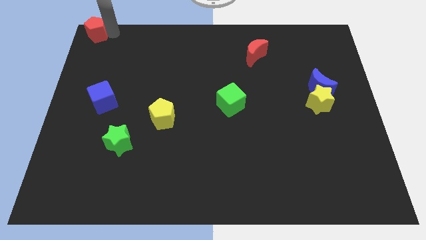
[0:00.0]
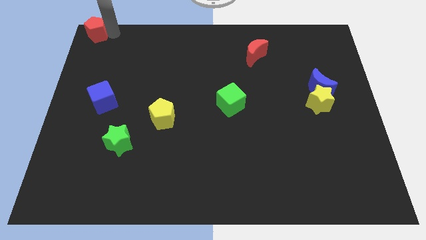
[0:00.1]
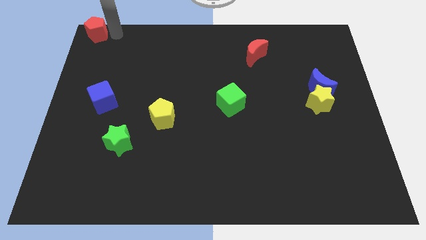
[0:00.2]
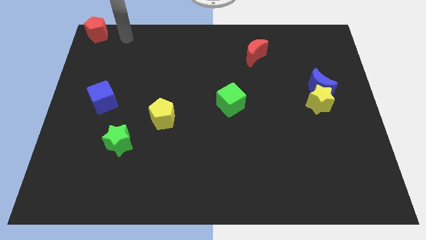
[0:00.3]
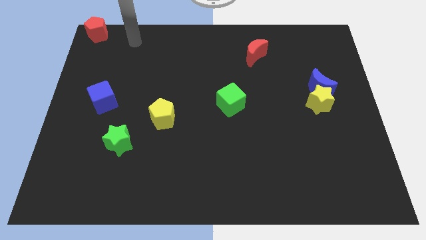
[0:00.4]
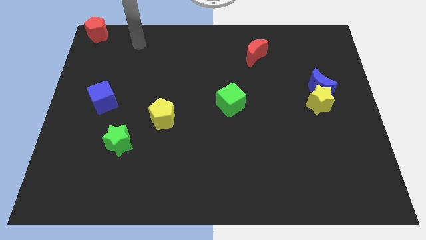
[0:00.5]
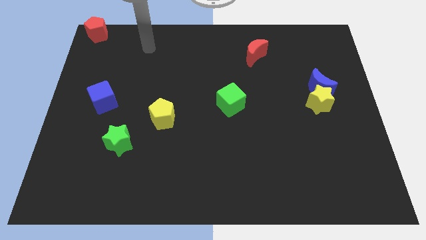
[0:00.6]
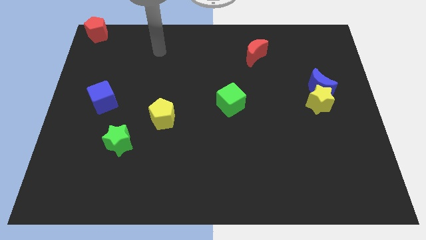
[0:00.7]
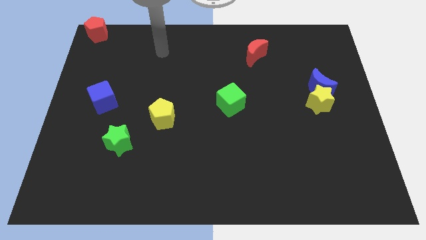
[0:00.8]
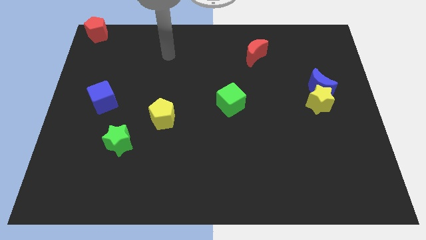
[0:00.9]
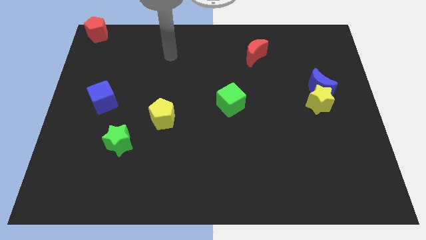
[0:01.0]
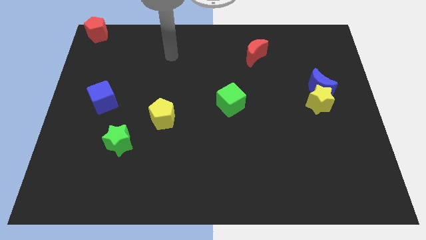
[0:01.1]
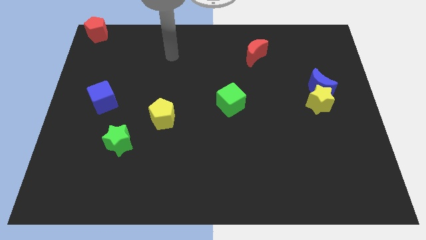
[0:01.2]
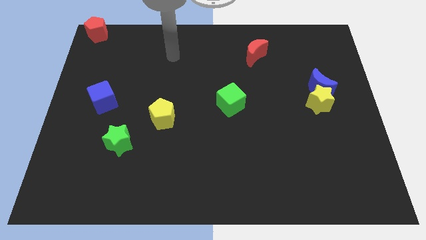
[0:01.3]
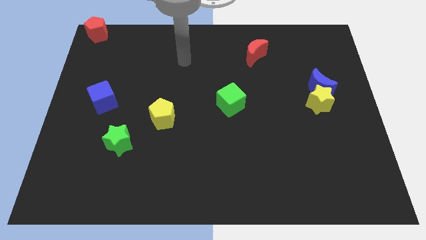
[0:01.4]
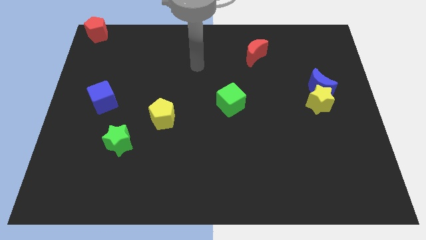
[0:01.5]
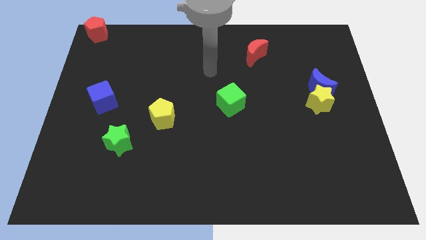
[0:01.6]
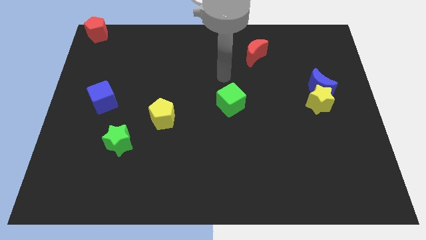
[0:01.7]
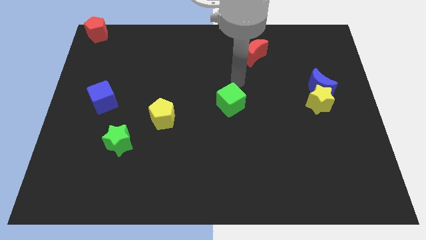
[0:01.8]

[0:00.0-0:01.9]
move your arm away from the red pentagon

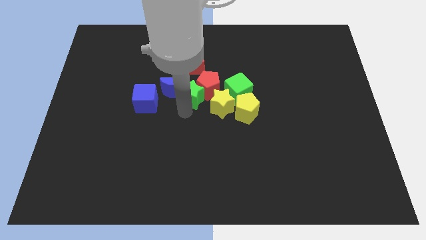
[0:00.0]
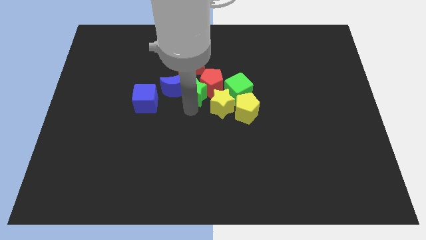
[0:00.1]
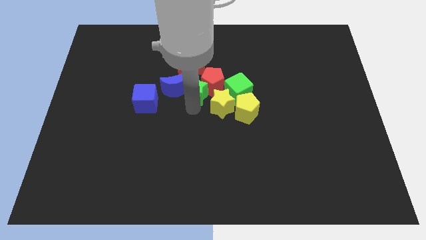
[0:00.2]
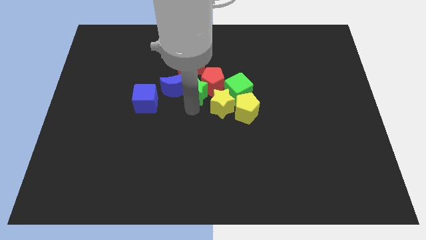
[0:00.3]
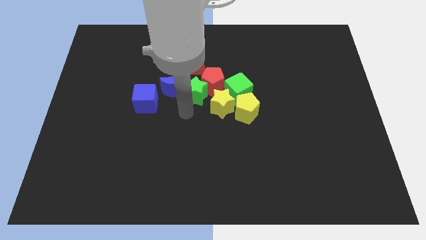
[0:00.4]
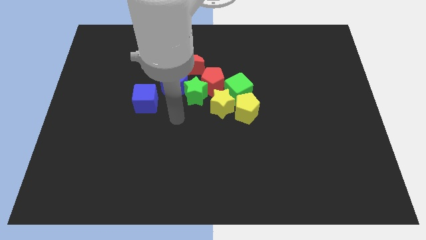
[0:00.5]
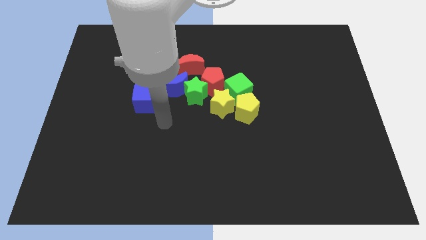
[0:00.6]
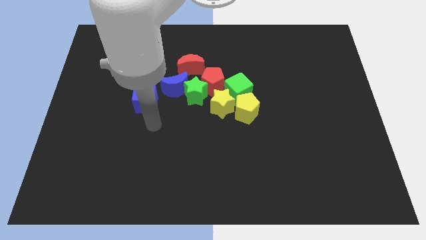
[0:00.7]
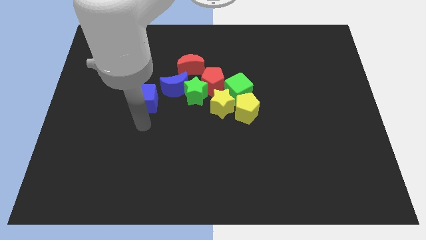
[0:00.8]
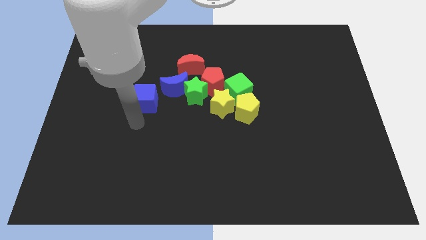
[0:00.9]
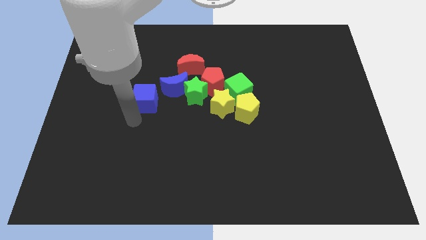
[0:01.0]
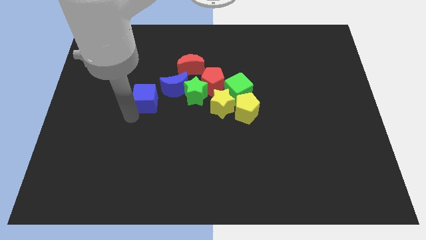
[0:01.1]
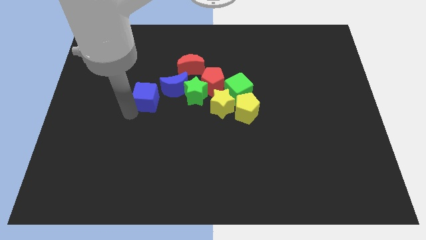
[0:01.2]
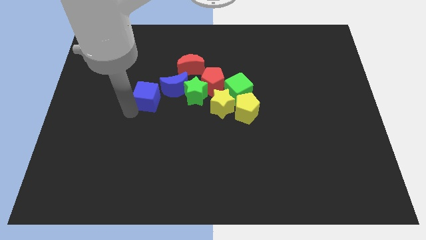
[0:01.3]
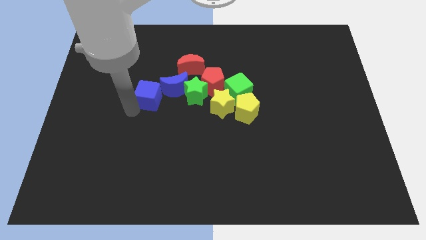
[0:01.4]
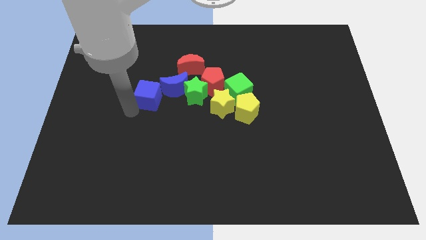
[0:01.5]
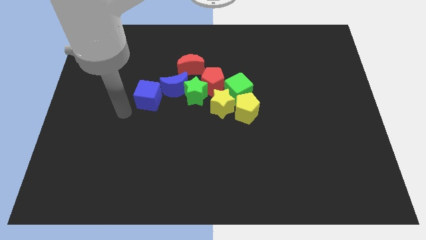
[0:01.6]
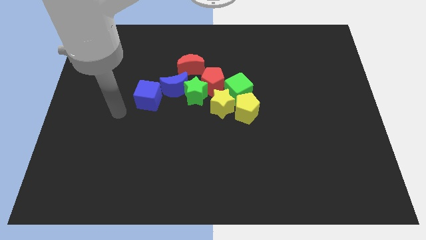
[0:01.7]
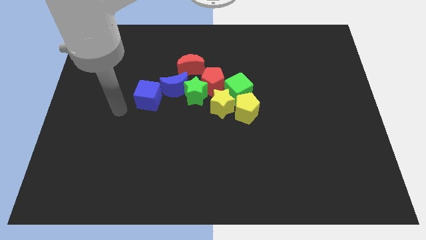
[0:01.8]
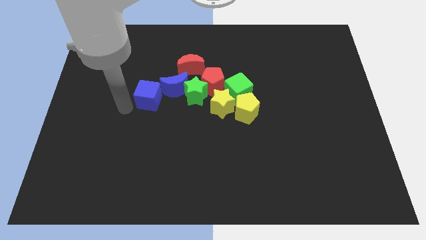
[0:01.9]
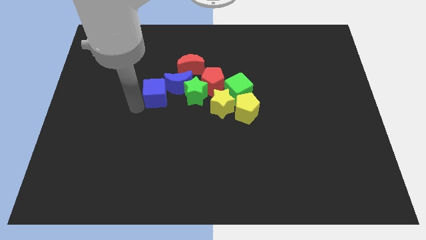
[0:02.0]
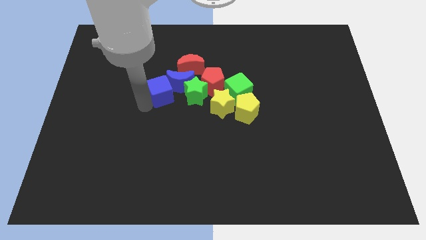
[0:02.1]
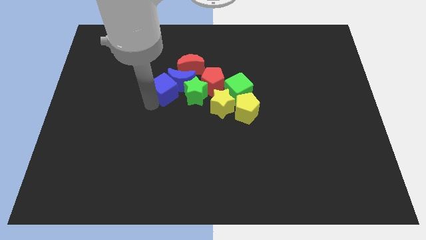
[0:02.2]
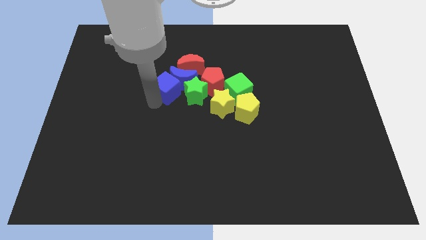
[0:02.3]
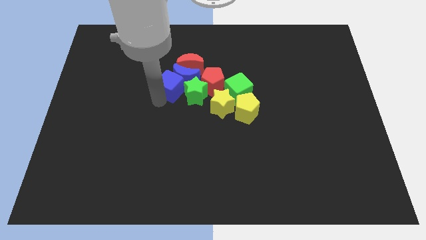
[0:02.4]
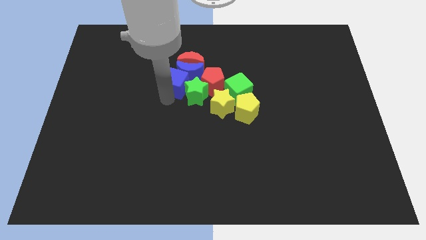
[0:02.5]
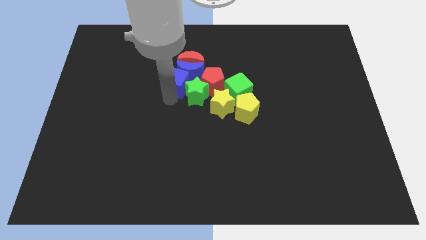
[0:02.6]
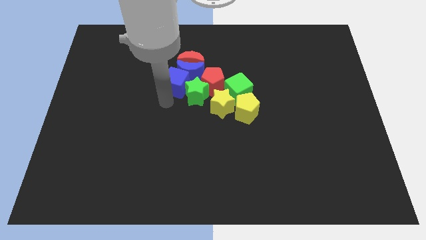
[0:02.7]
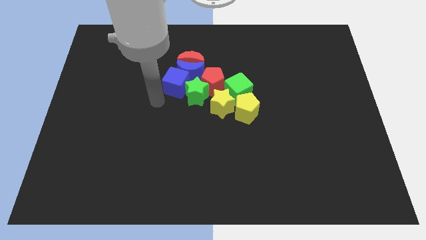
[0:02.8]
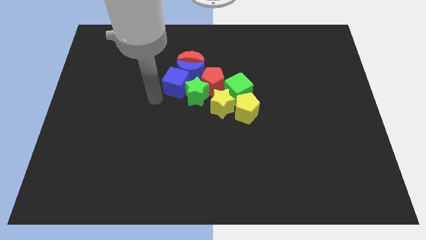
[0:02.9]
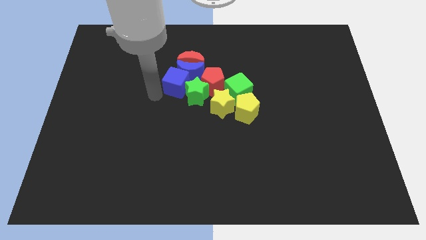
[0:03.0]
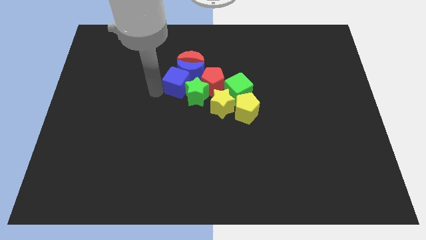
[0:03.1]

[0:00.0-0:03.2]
push the blue cube into the bottom of the blue crescent

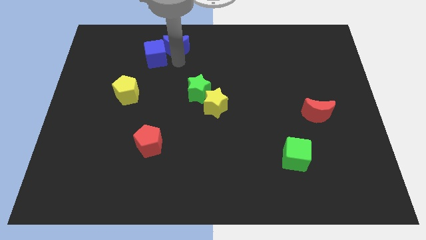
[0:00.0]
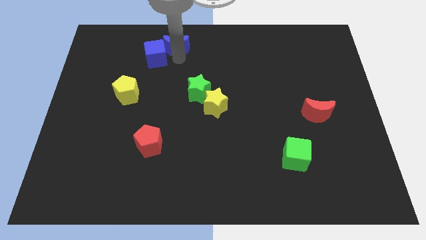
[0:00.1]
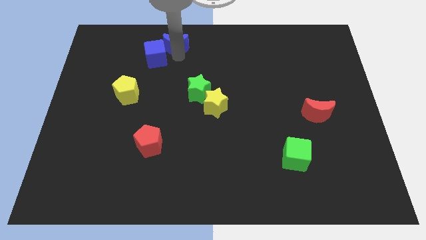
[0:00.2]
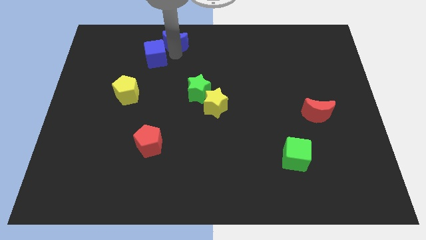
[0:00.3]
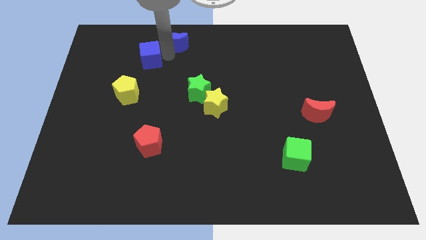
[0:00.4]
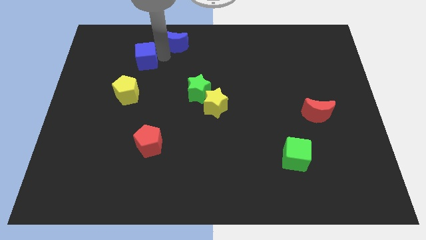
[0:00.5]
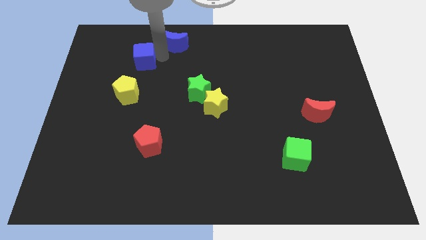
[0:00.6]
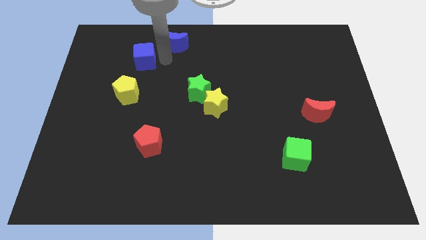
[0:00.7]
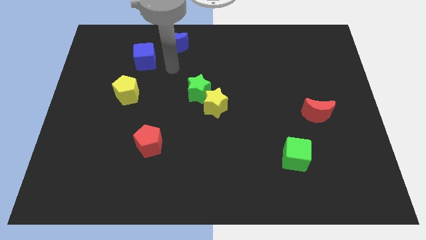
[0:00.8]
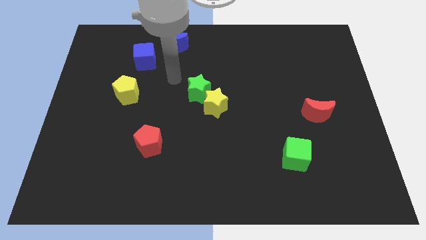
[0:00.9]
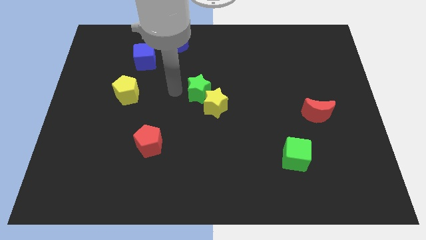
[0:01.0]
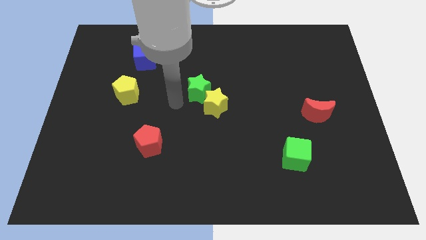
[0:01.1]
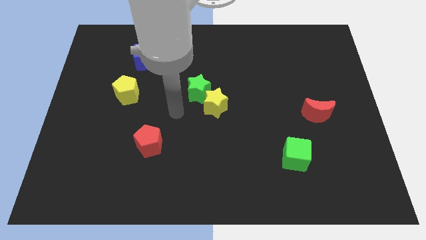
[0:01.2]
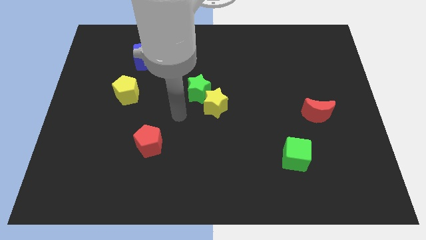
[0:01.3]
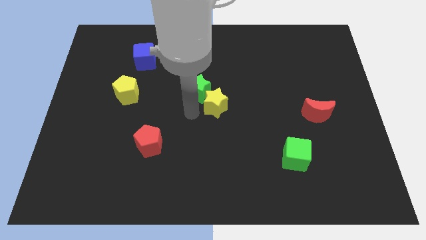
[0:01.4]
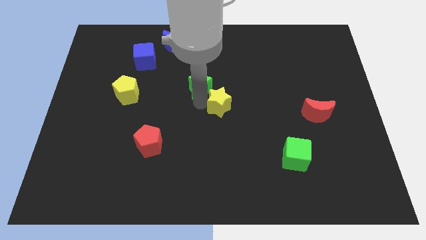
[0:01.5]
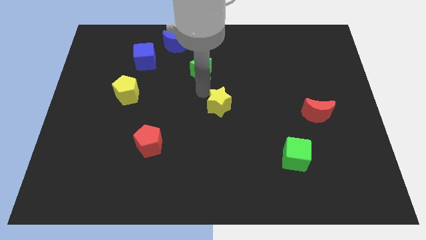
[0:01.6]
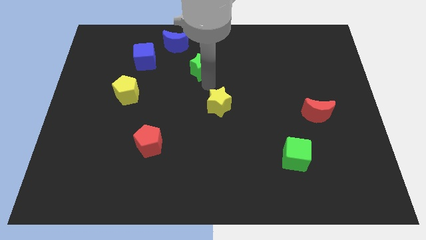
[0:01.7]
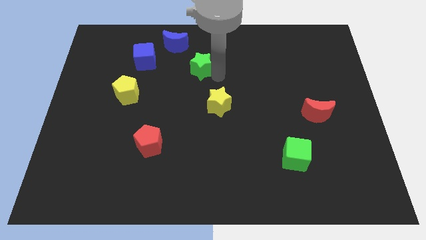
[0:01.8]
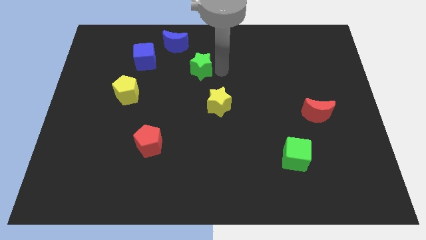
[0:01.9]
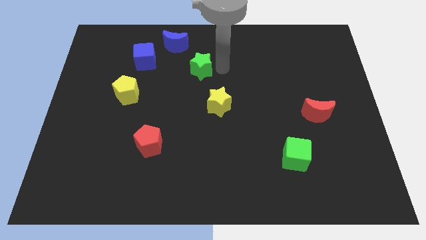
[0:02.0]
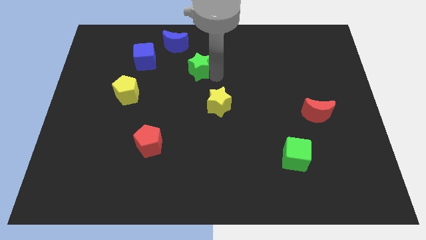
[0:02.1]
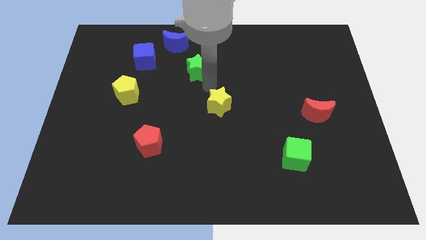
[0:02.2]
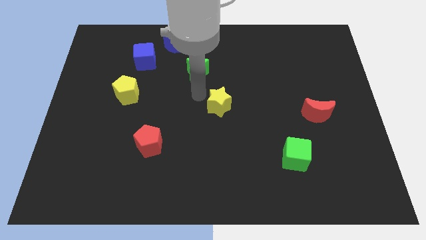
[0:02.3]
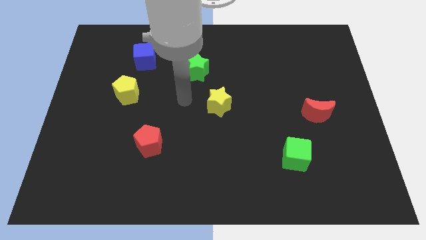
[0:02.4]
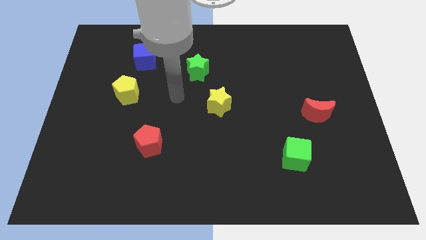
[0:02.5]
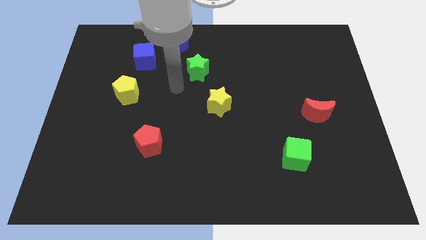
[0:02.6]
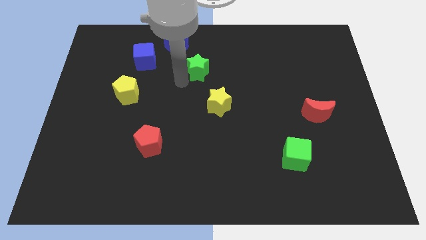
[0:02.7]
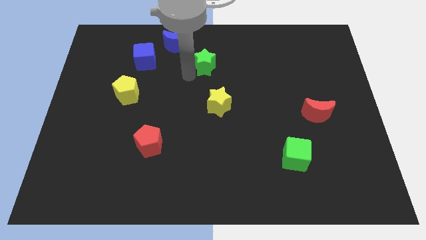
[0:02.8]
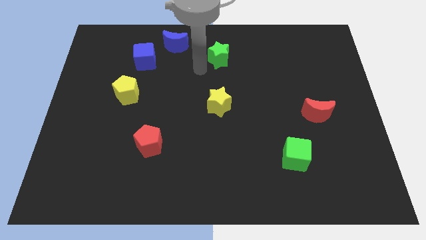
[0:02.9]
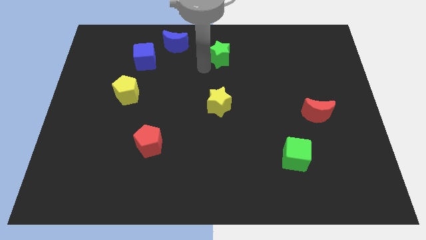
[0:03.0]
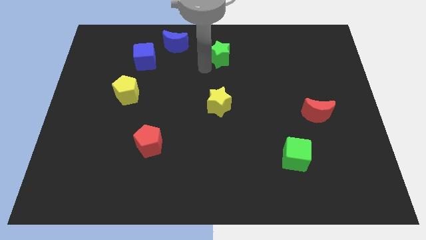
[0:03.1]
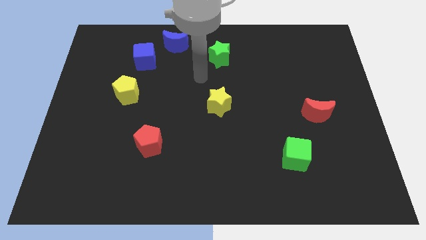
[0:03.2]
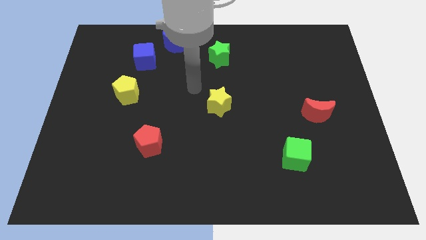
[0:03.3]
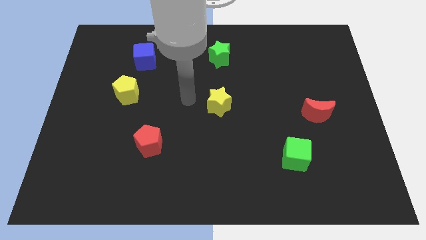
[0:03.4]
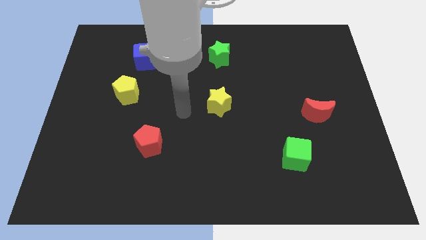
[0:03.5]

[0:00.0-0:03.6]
move the green star bottom right to the blue crescent

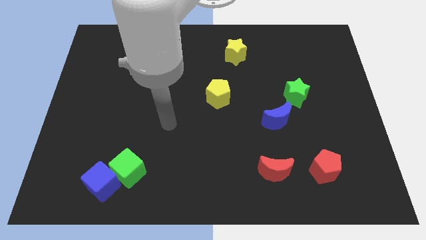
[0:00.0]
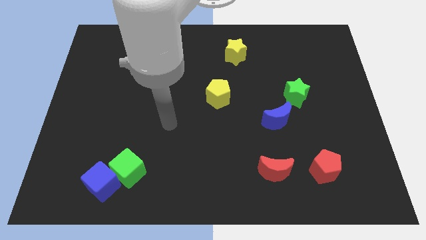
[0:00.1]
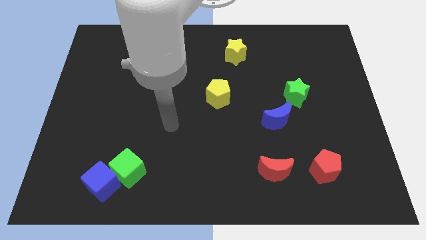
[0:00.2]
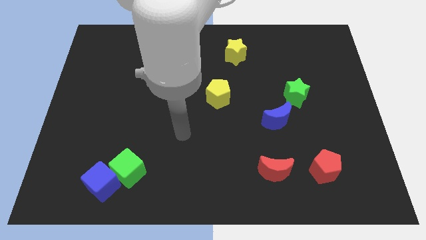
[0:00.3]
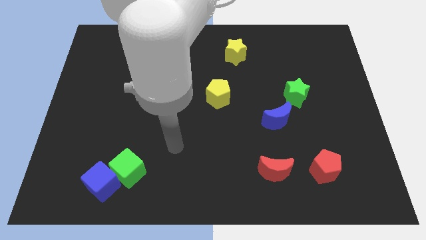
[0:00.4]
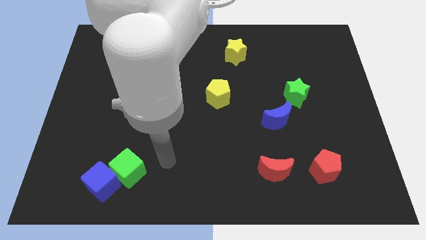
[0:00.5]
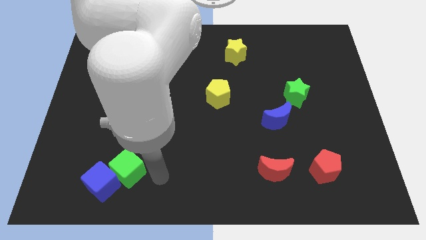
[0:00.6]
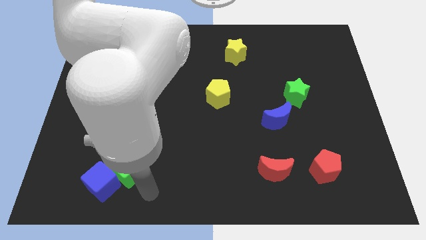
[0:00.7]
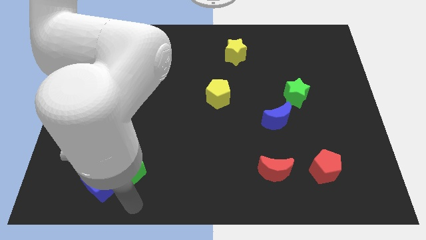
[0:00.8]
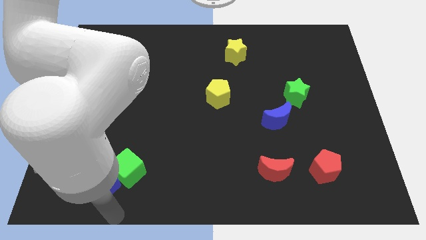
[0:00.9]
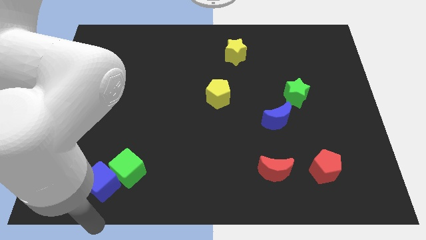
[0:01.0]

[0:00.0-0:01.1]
move your arm below the blue cube
